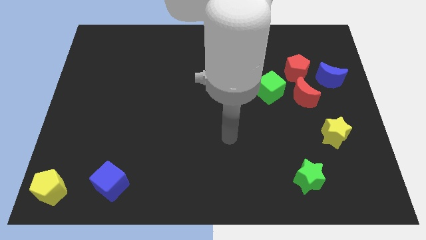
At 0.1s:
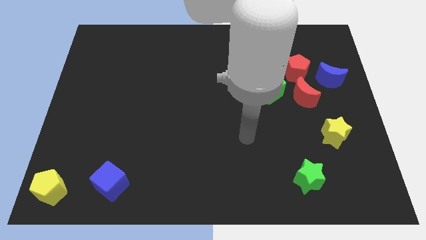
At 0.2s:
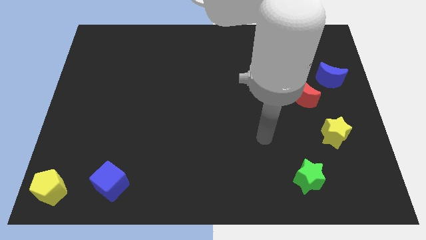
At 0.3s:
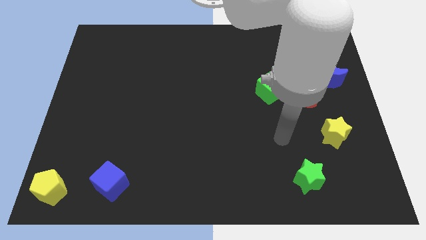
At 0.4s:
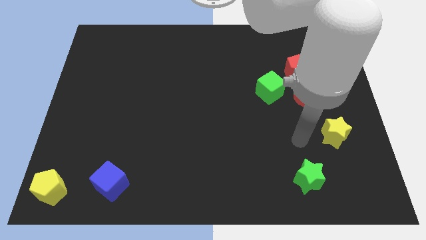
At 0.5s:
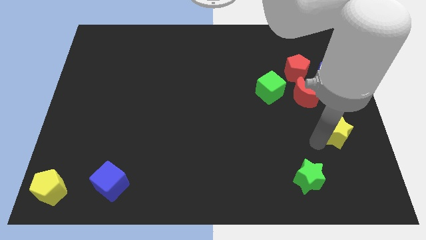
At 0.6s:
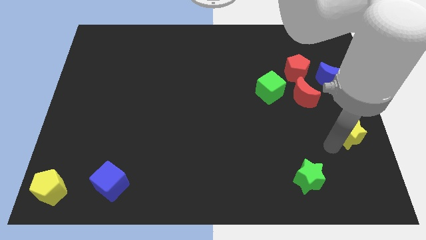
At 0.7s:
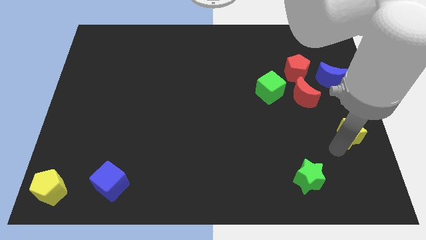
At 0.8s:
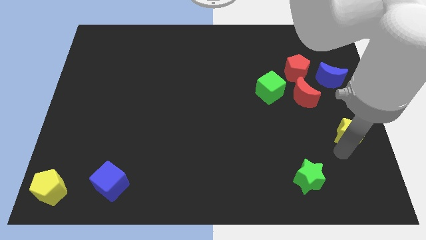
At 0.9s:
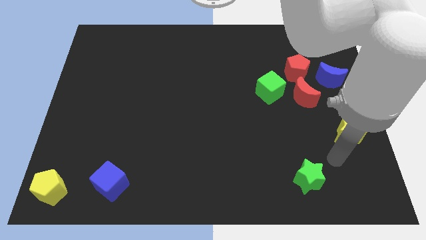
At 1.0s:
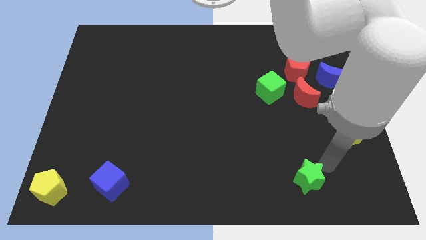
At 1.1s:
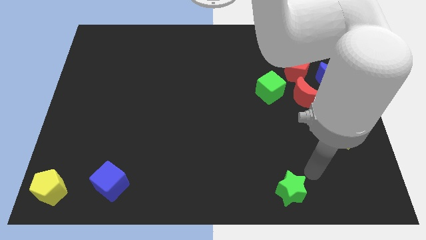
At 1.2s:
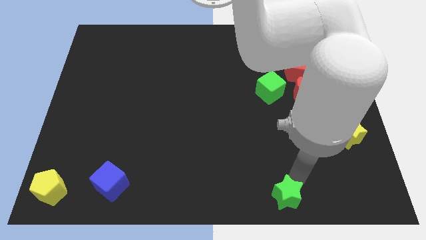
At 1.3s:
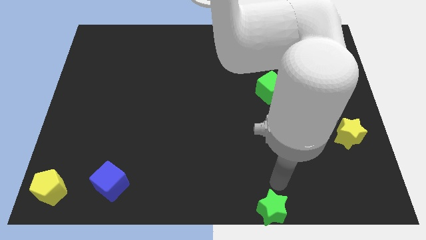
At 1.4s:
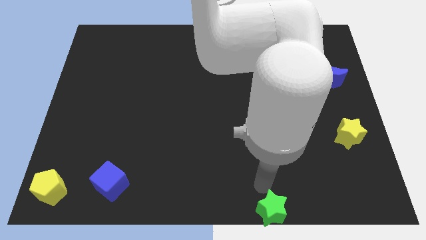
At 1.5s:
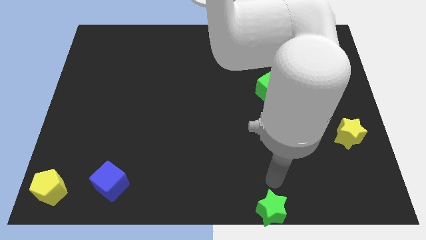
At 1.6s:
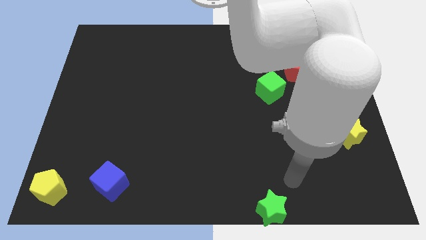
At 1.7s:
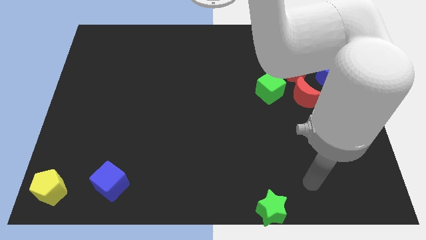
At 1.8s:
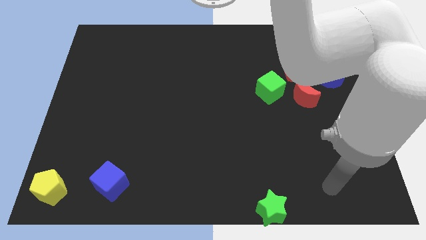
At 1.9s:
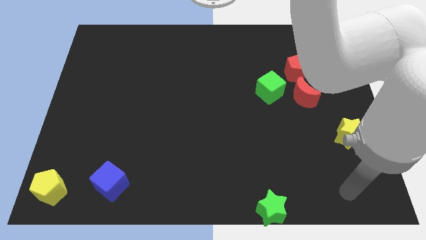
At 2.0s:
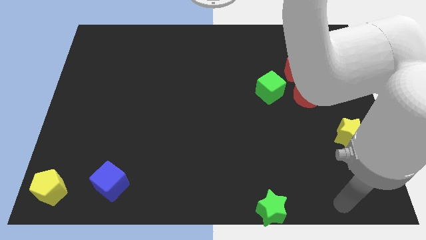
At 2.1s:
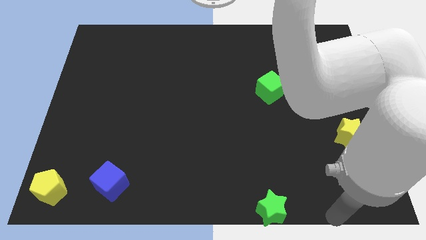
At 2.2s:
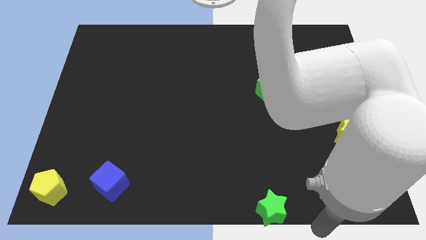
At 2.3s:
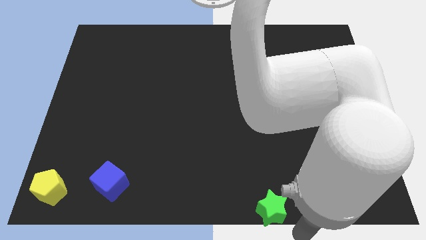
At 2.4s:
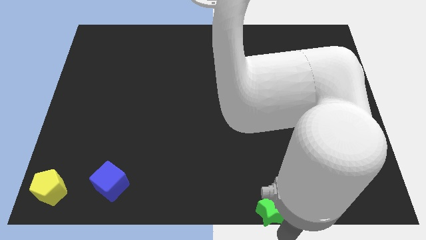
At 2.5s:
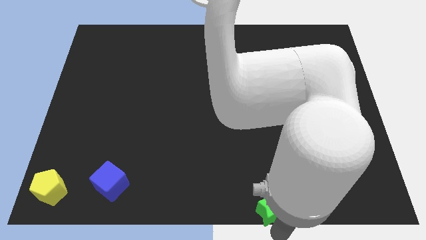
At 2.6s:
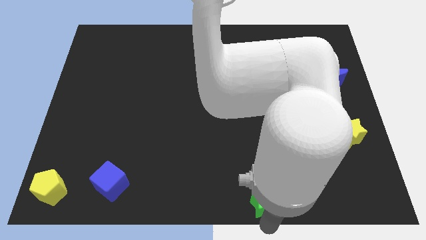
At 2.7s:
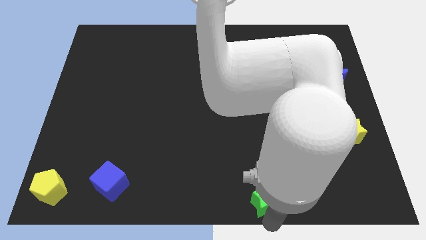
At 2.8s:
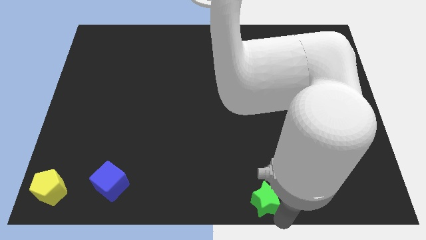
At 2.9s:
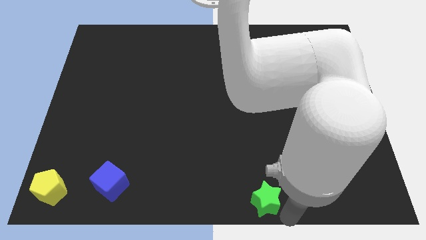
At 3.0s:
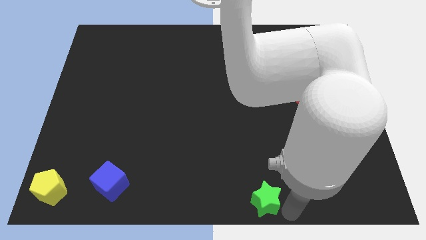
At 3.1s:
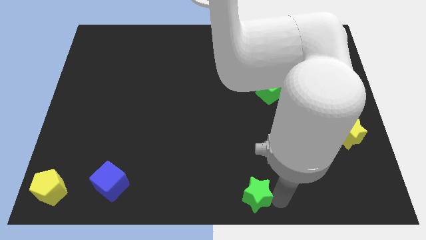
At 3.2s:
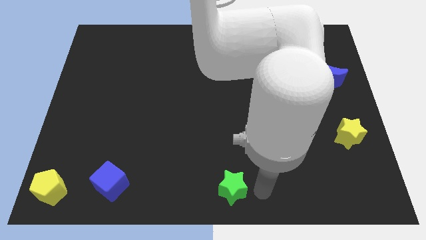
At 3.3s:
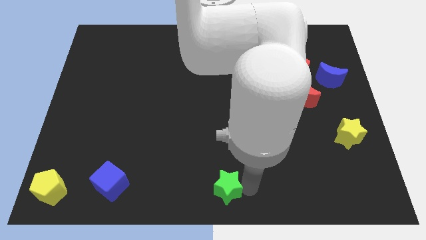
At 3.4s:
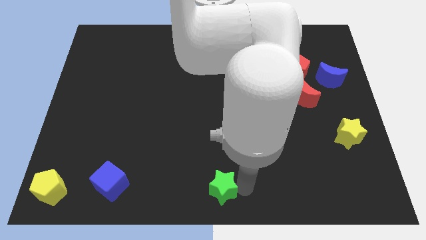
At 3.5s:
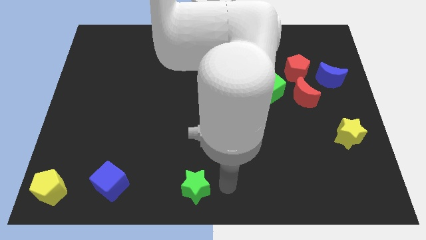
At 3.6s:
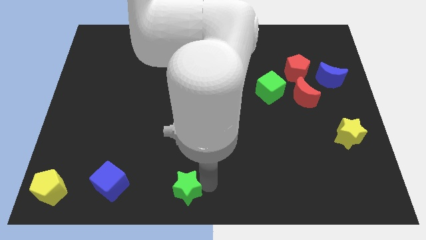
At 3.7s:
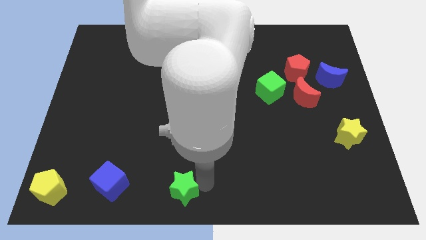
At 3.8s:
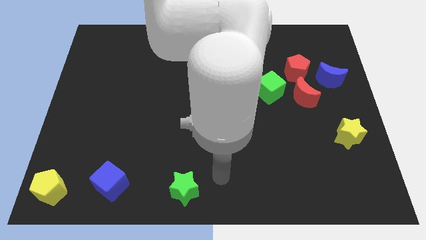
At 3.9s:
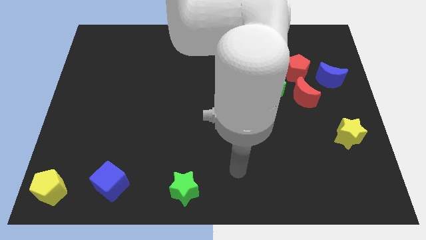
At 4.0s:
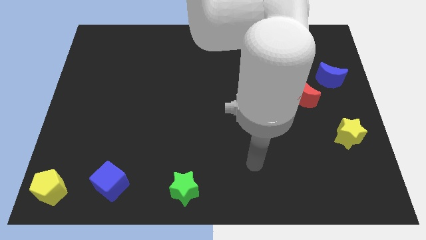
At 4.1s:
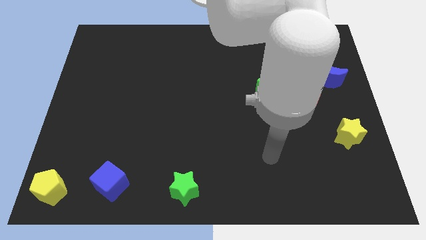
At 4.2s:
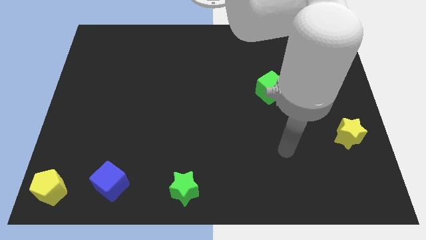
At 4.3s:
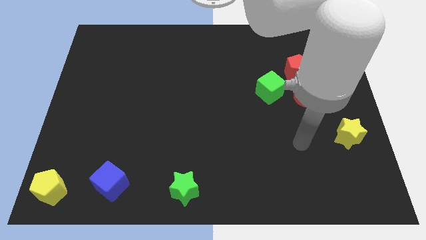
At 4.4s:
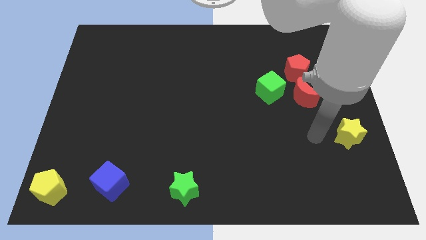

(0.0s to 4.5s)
push the green star to the right side of the blue cube

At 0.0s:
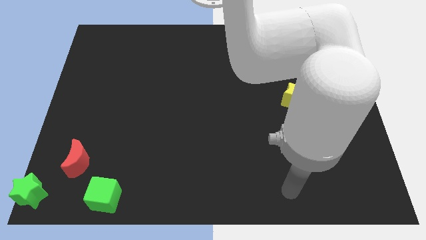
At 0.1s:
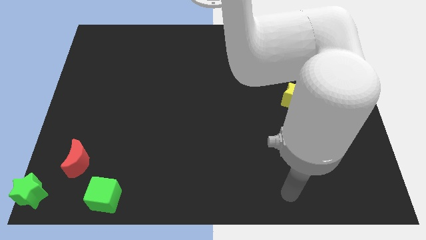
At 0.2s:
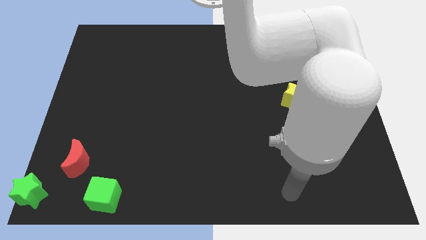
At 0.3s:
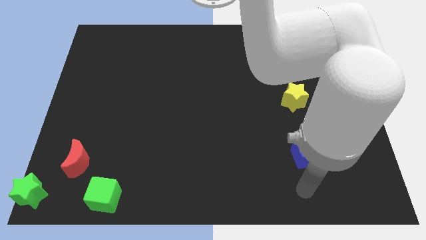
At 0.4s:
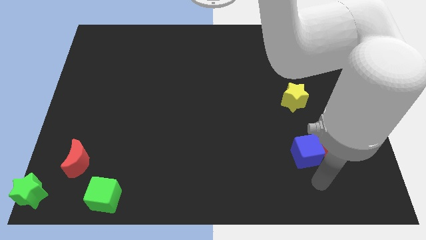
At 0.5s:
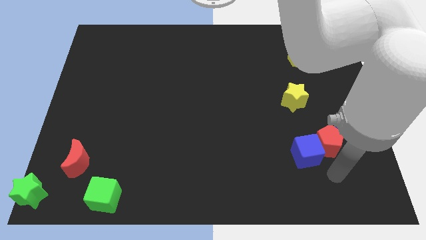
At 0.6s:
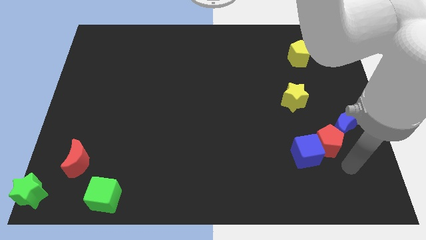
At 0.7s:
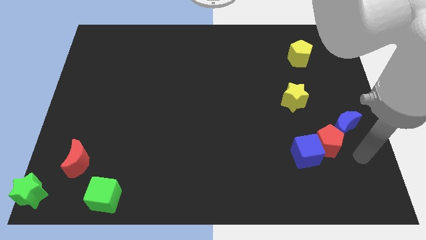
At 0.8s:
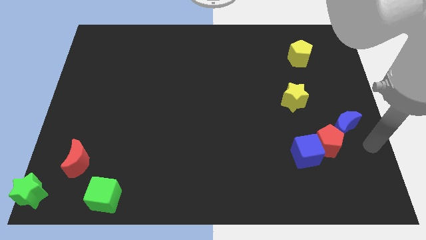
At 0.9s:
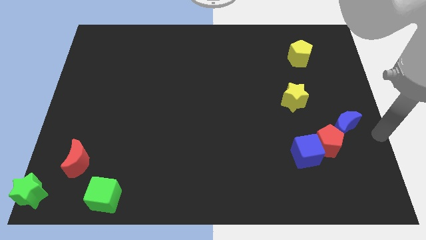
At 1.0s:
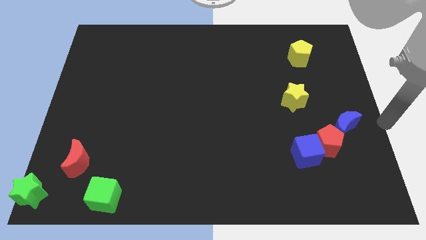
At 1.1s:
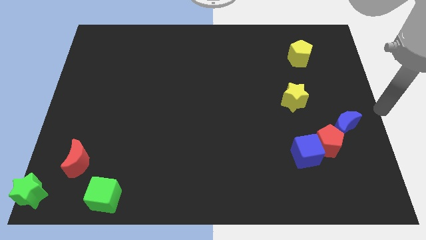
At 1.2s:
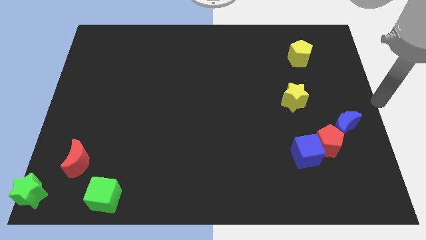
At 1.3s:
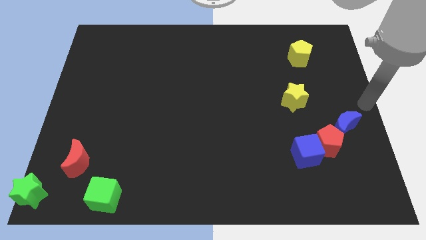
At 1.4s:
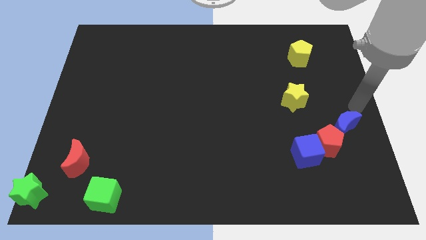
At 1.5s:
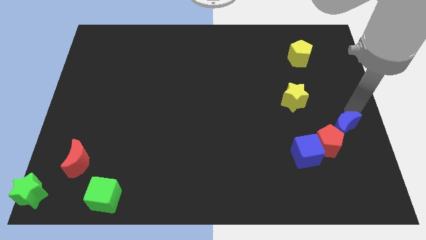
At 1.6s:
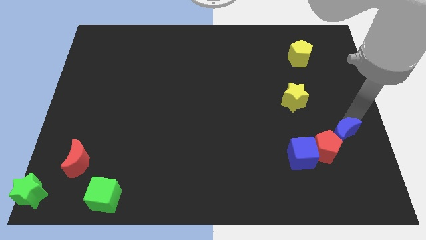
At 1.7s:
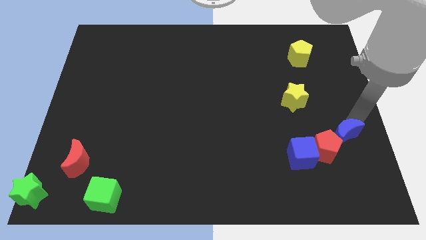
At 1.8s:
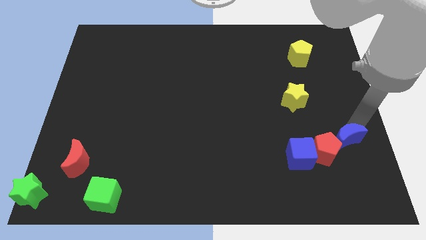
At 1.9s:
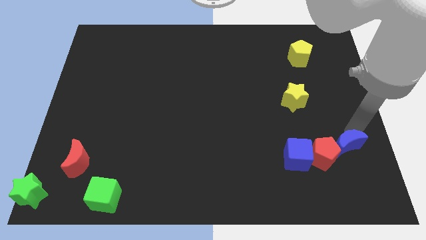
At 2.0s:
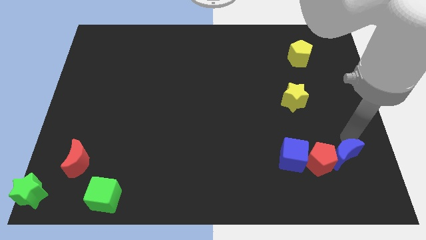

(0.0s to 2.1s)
push the blue moon downwards

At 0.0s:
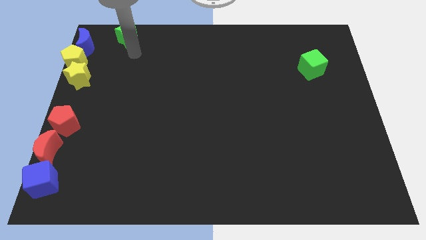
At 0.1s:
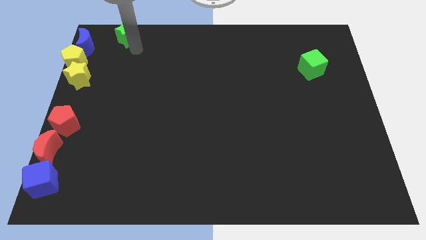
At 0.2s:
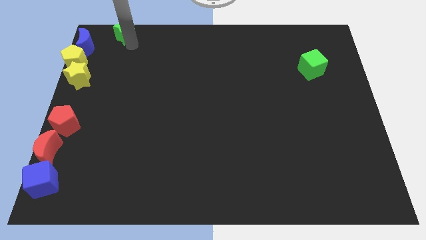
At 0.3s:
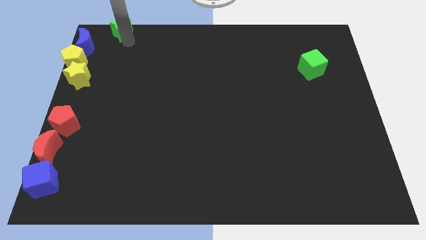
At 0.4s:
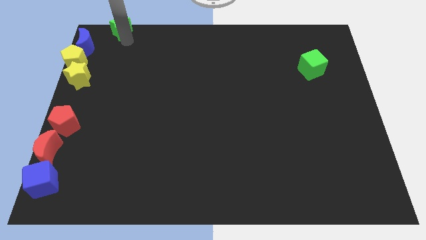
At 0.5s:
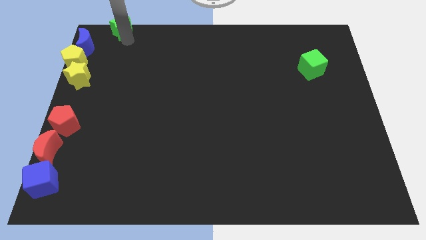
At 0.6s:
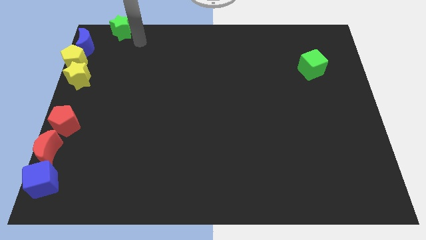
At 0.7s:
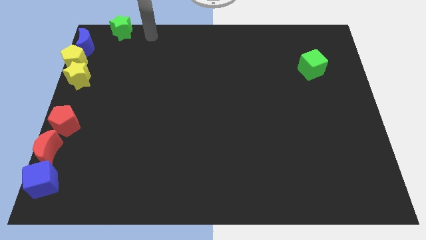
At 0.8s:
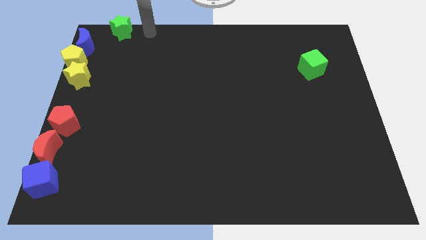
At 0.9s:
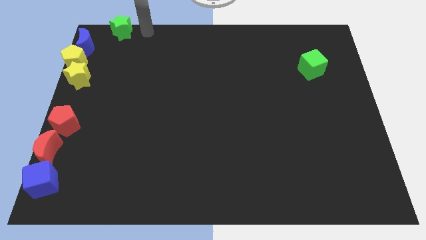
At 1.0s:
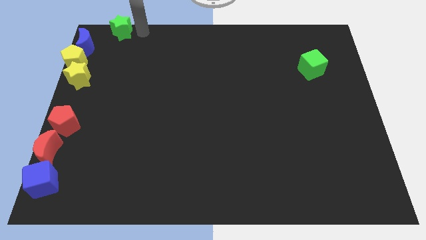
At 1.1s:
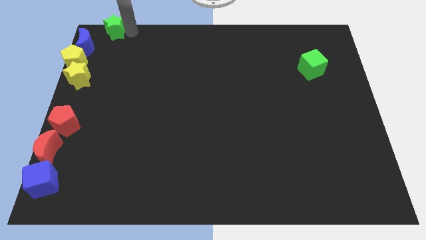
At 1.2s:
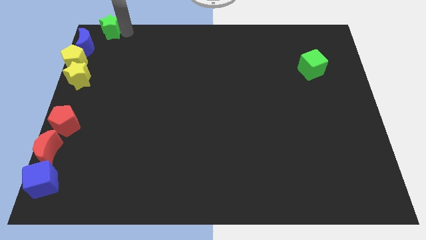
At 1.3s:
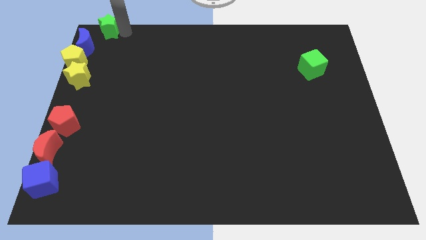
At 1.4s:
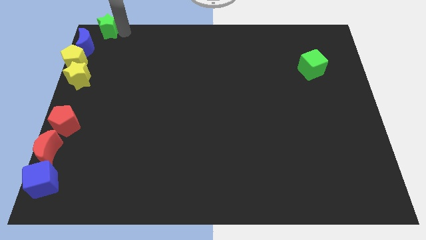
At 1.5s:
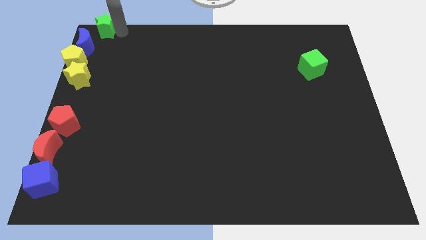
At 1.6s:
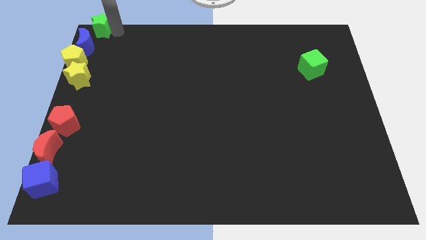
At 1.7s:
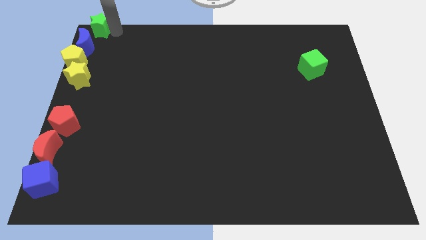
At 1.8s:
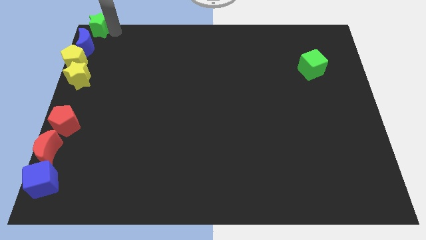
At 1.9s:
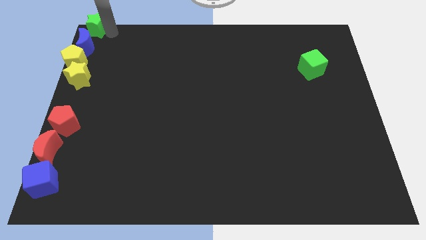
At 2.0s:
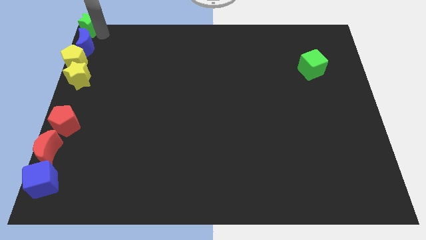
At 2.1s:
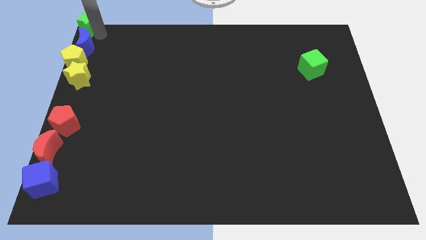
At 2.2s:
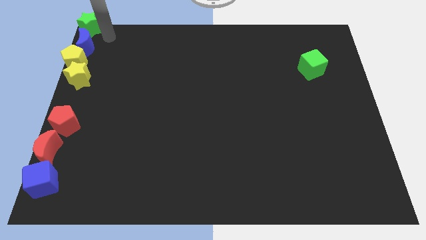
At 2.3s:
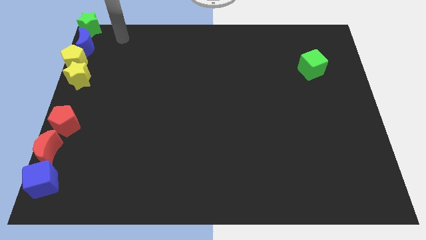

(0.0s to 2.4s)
move the green star to the top left of the board
